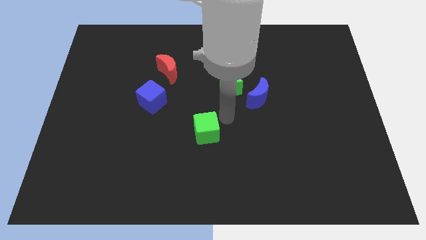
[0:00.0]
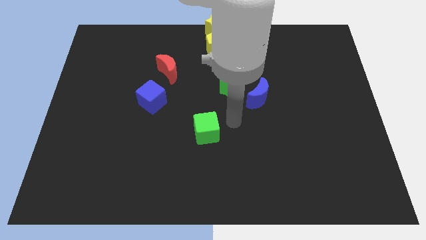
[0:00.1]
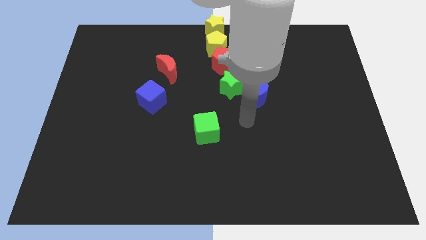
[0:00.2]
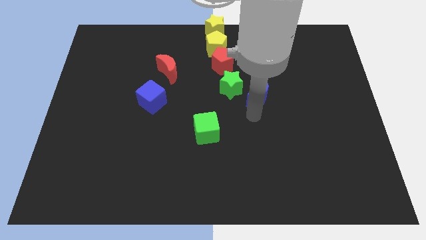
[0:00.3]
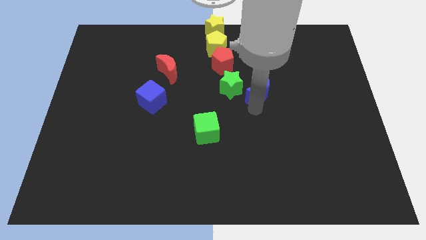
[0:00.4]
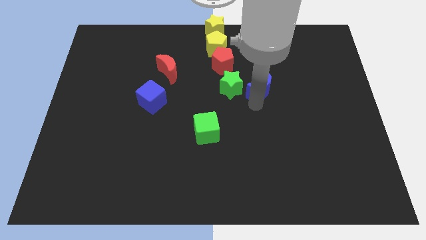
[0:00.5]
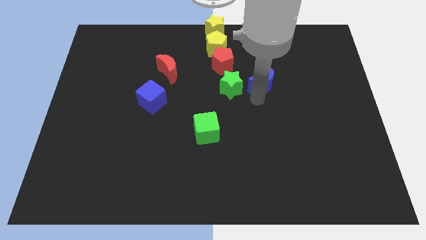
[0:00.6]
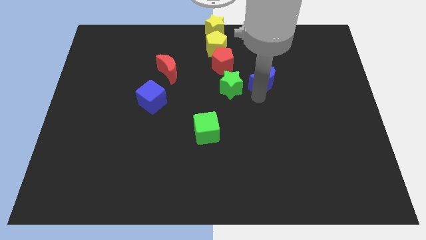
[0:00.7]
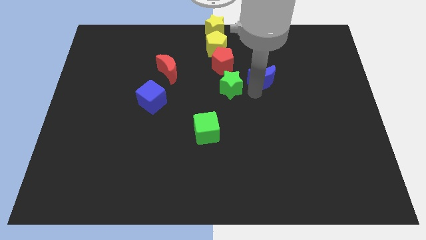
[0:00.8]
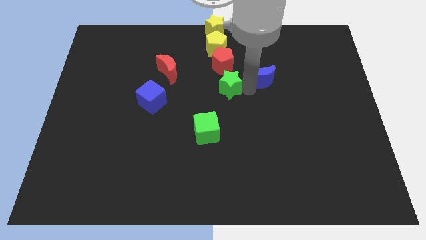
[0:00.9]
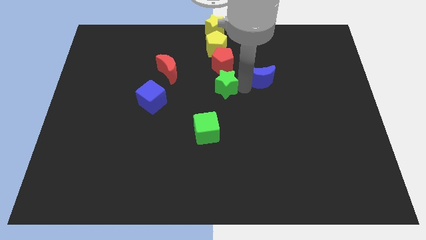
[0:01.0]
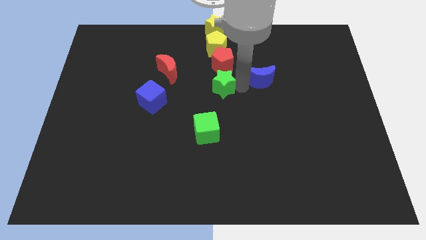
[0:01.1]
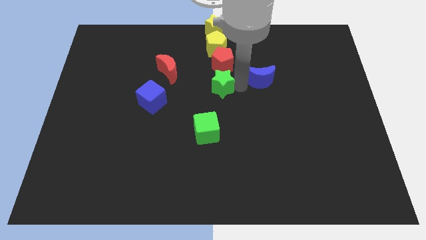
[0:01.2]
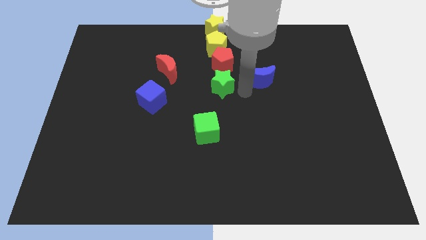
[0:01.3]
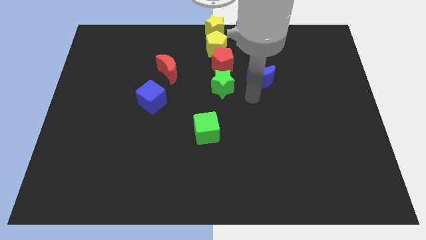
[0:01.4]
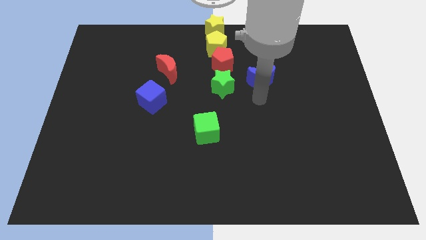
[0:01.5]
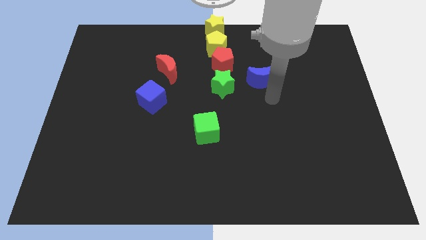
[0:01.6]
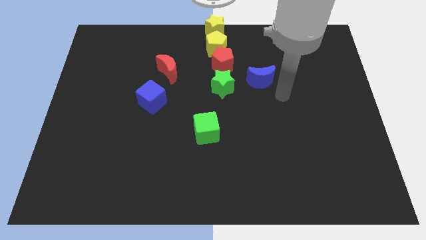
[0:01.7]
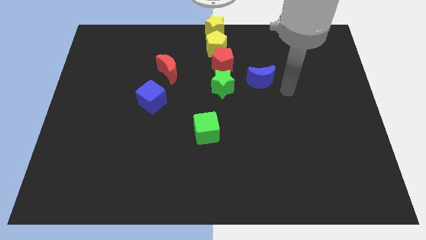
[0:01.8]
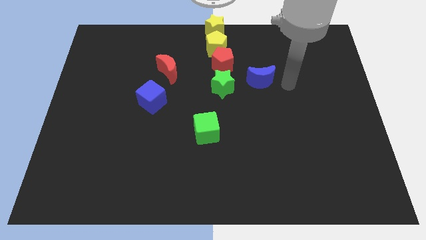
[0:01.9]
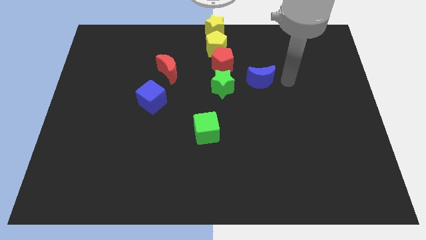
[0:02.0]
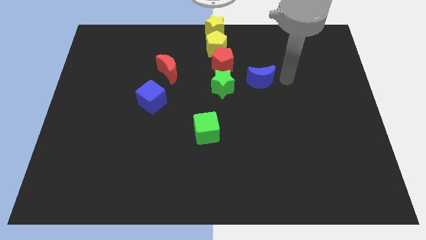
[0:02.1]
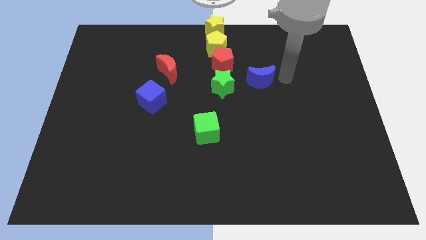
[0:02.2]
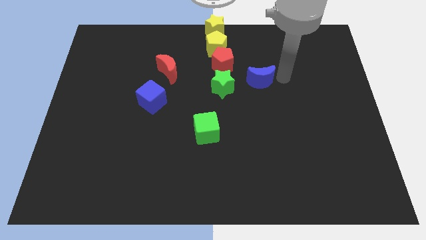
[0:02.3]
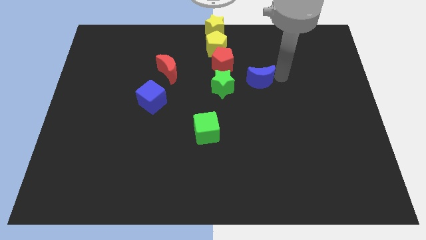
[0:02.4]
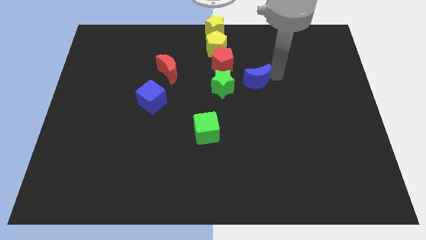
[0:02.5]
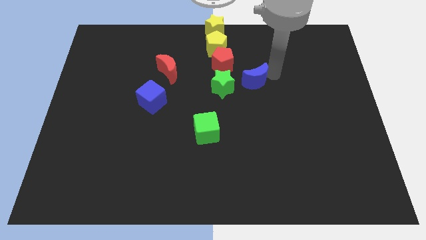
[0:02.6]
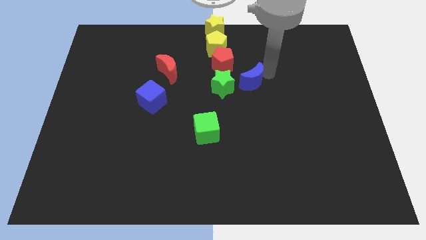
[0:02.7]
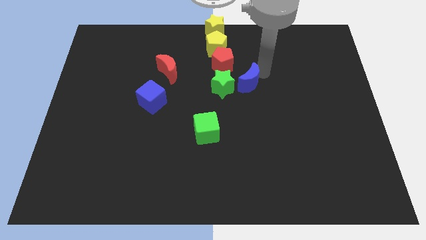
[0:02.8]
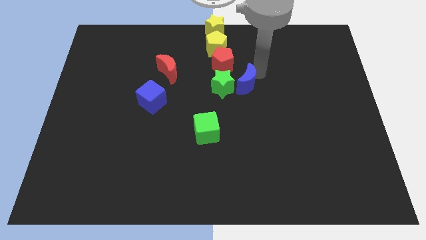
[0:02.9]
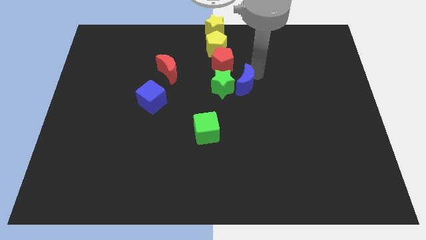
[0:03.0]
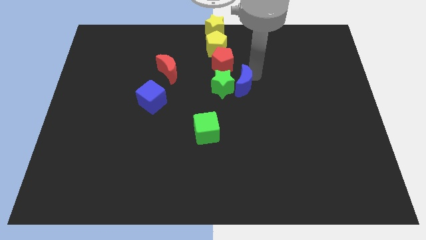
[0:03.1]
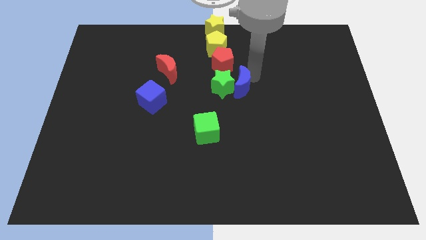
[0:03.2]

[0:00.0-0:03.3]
push blue crescent right beside green star

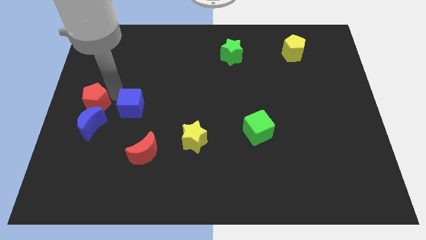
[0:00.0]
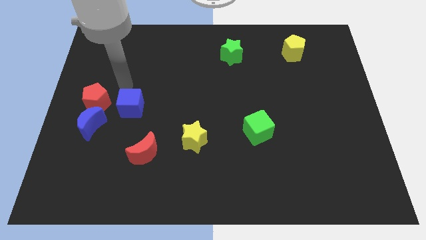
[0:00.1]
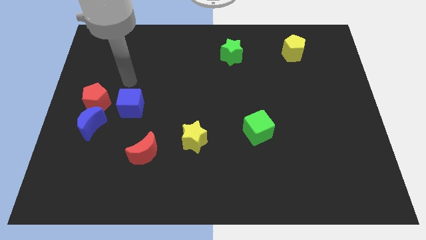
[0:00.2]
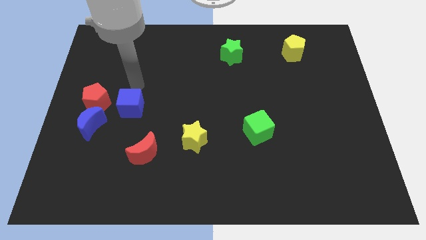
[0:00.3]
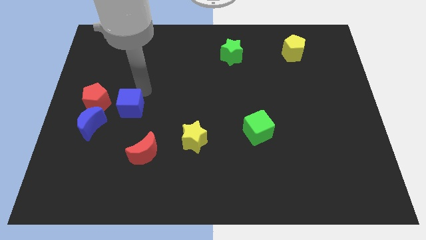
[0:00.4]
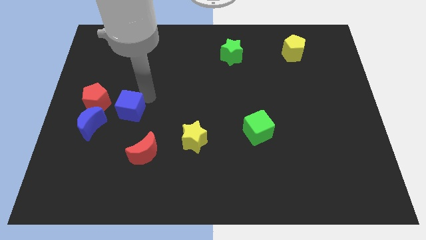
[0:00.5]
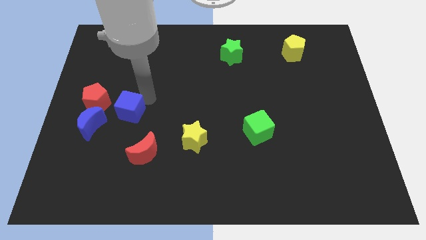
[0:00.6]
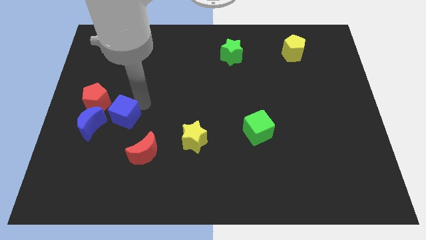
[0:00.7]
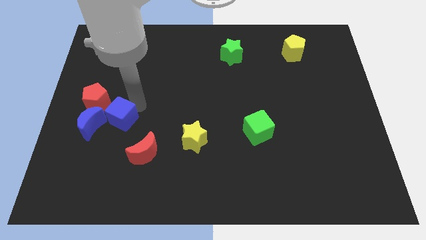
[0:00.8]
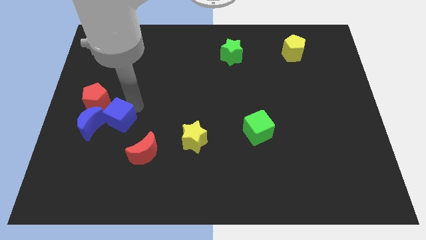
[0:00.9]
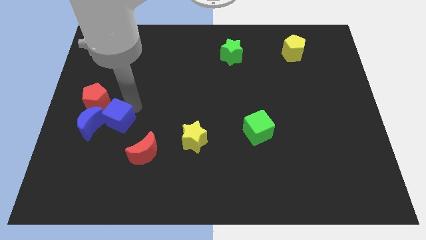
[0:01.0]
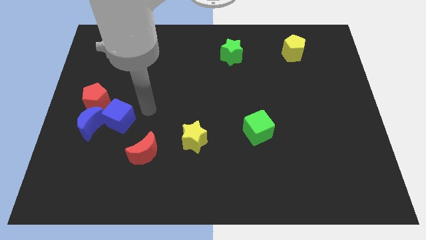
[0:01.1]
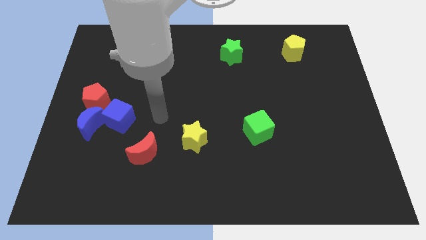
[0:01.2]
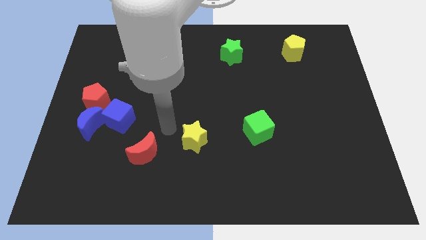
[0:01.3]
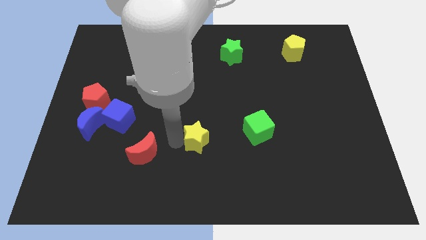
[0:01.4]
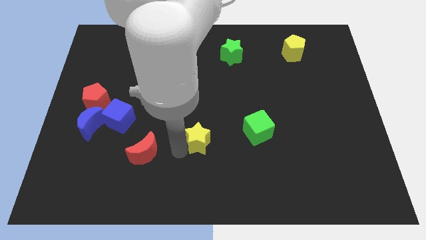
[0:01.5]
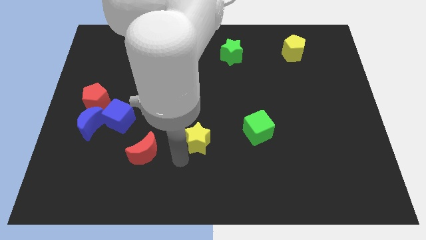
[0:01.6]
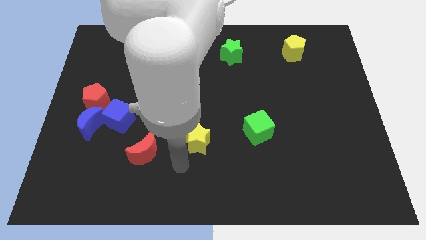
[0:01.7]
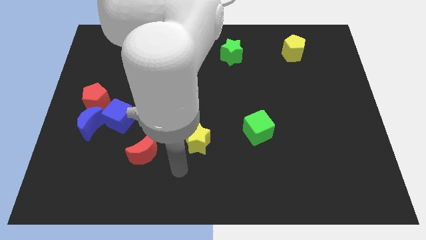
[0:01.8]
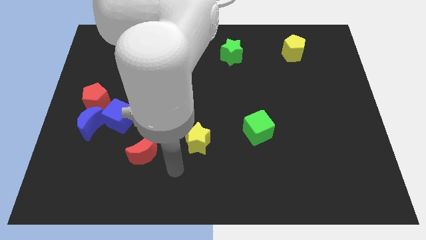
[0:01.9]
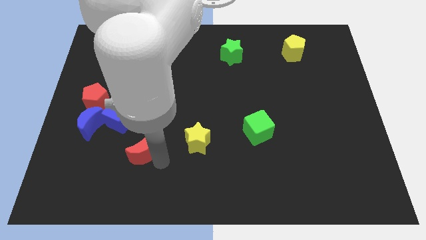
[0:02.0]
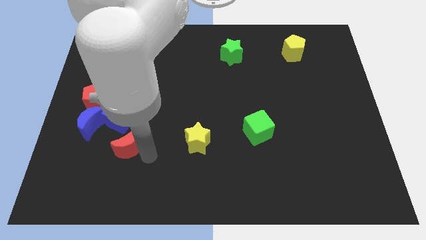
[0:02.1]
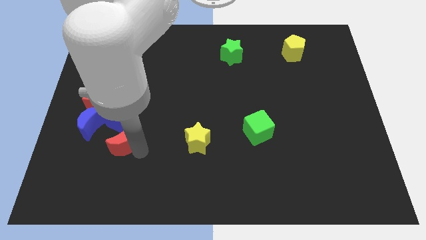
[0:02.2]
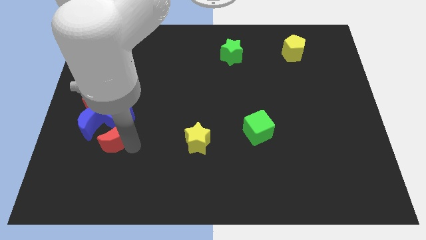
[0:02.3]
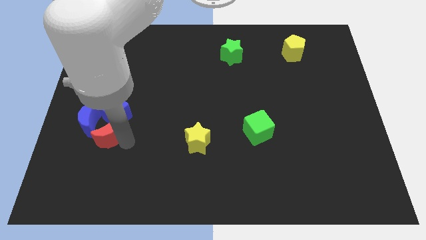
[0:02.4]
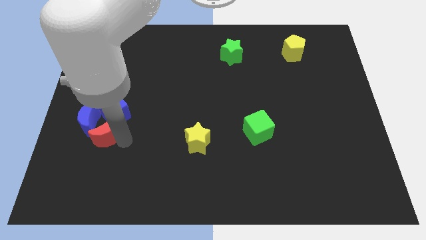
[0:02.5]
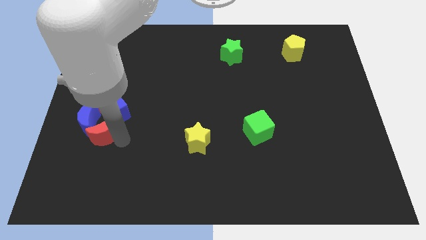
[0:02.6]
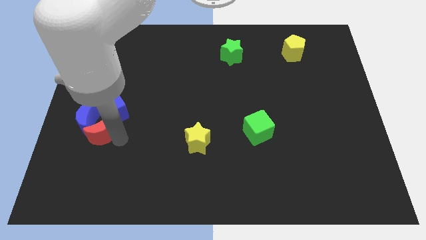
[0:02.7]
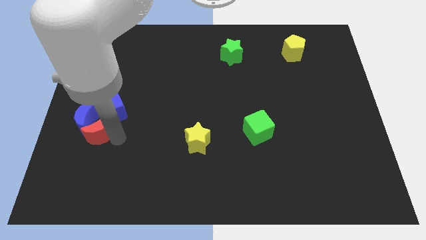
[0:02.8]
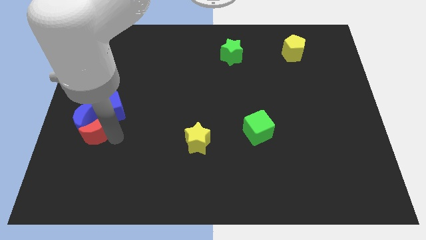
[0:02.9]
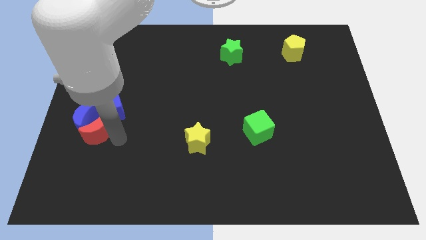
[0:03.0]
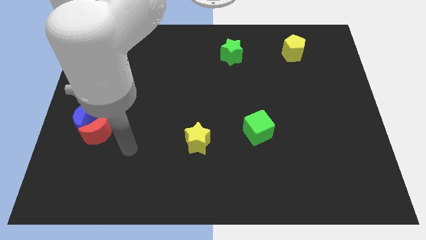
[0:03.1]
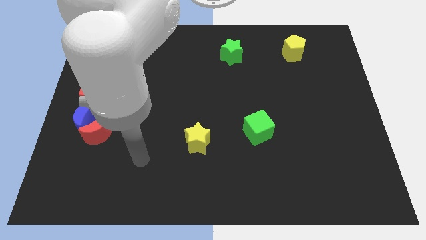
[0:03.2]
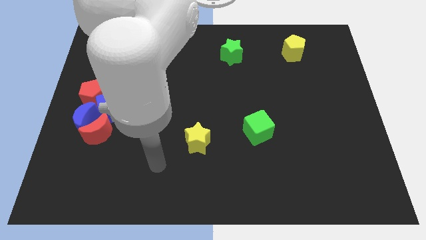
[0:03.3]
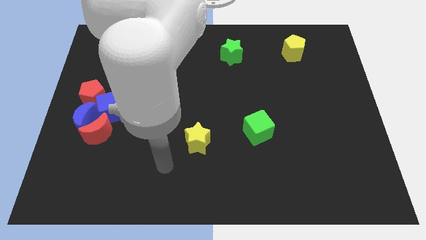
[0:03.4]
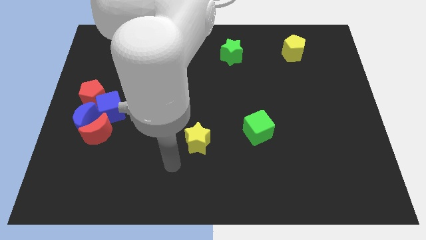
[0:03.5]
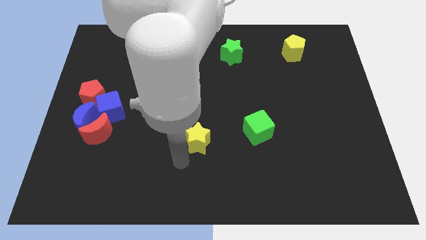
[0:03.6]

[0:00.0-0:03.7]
place the red and blue blocks at the center left side of the board

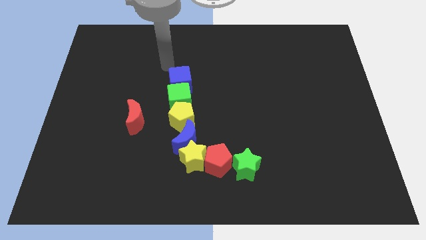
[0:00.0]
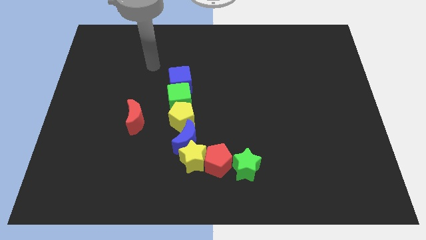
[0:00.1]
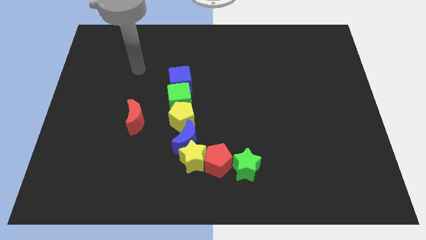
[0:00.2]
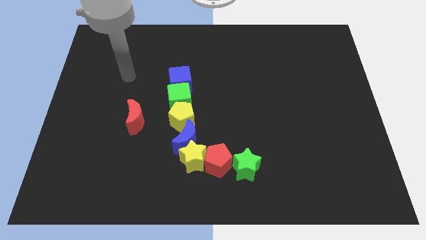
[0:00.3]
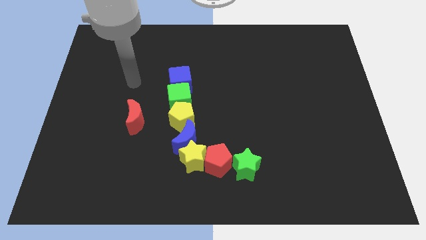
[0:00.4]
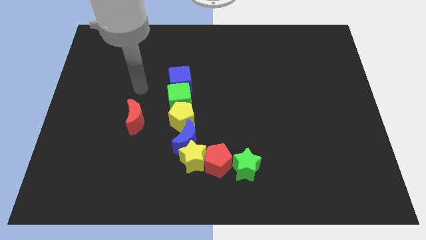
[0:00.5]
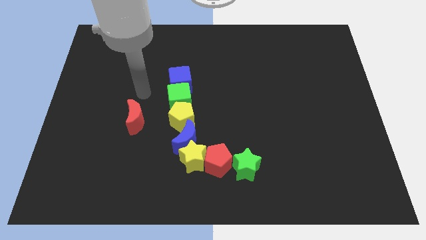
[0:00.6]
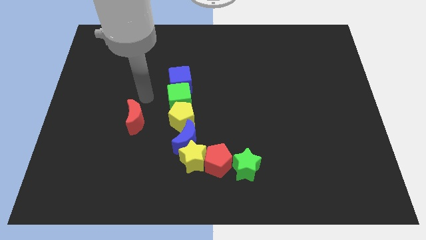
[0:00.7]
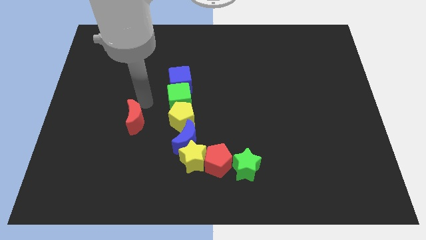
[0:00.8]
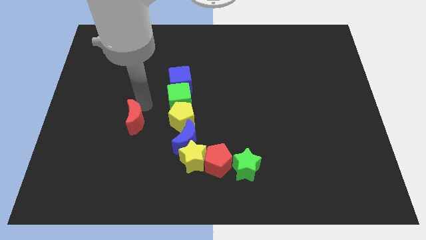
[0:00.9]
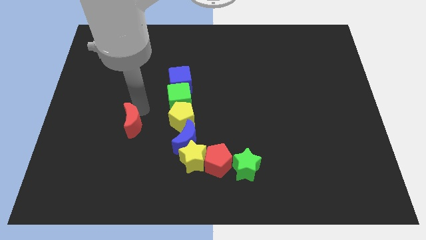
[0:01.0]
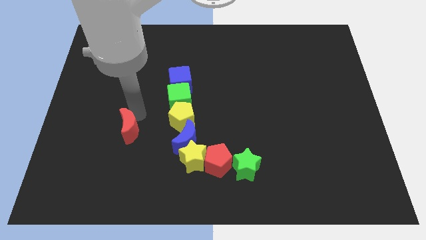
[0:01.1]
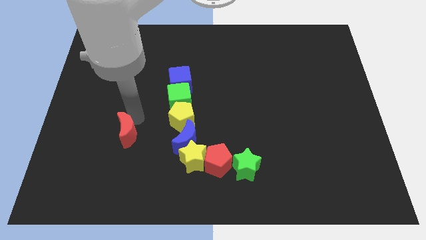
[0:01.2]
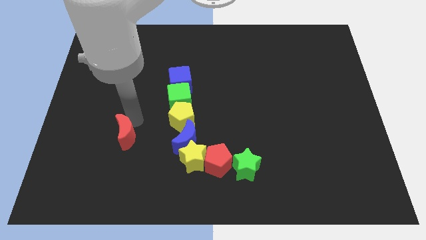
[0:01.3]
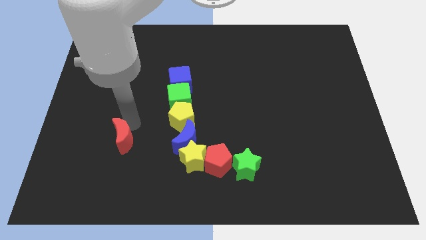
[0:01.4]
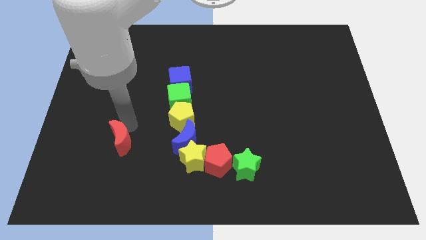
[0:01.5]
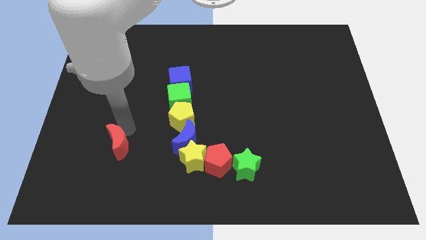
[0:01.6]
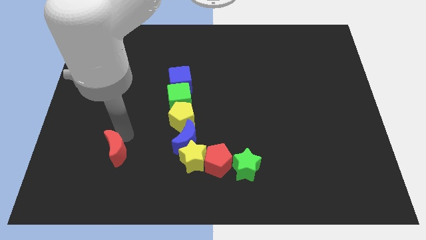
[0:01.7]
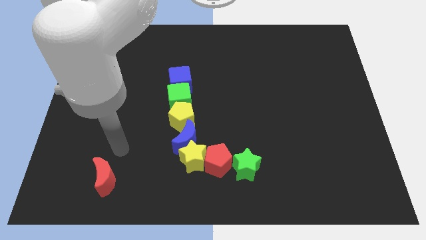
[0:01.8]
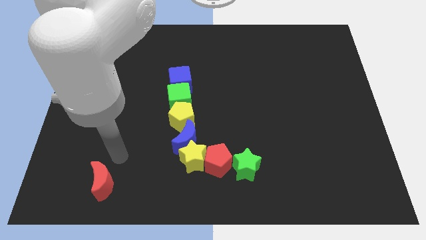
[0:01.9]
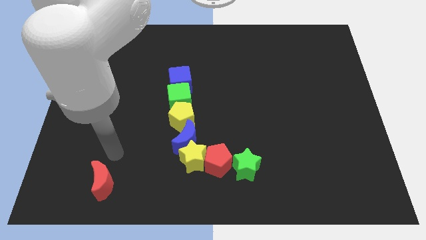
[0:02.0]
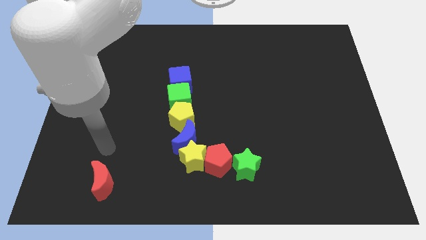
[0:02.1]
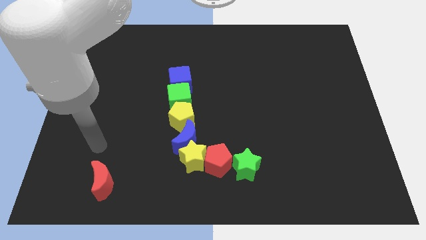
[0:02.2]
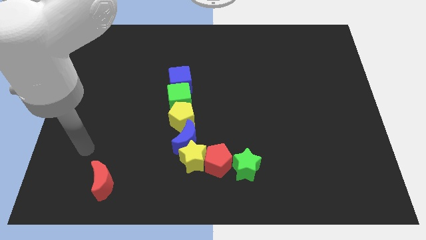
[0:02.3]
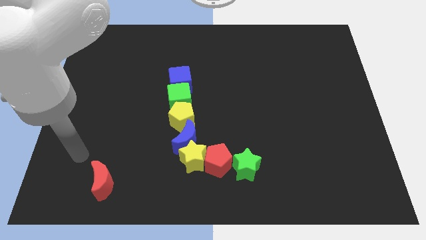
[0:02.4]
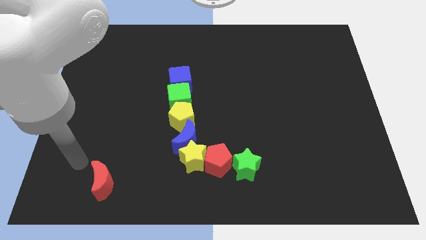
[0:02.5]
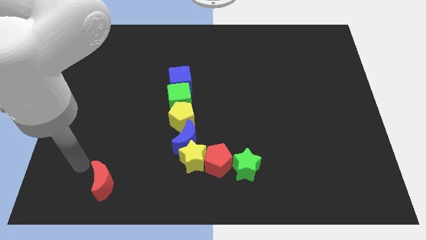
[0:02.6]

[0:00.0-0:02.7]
move the red moon down to the board
